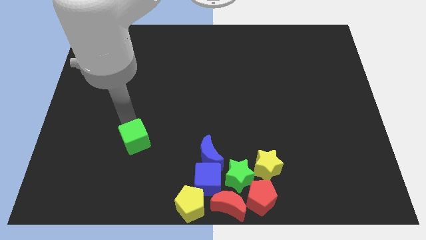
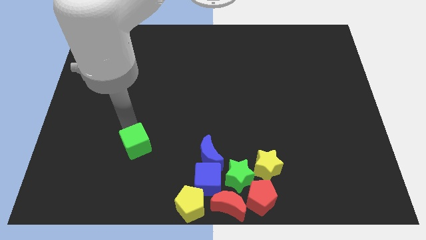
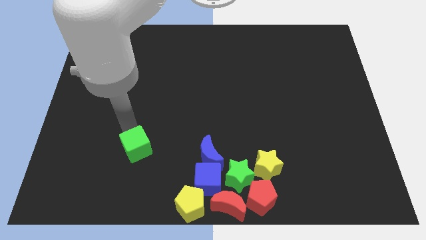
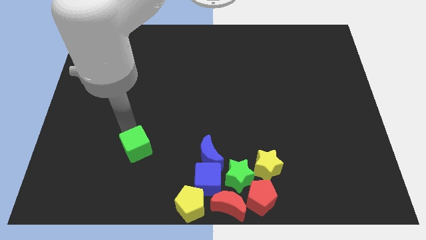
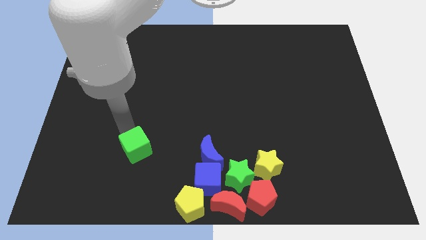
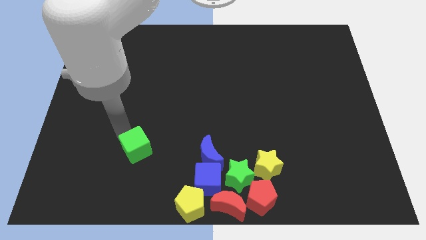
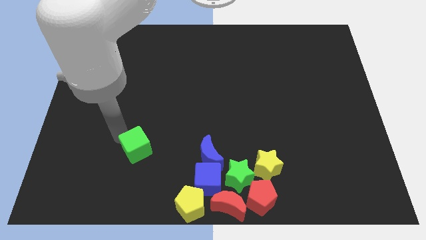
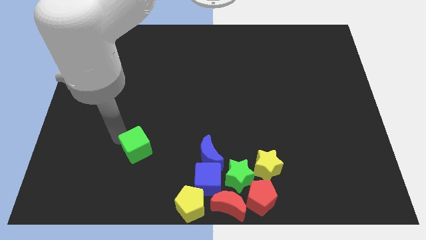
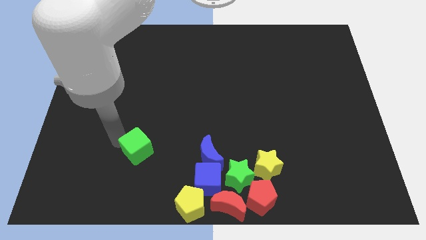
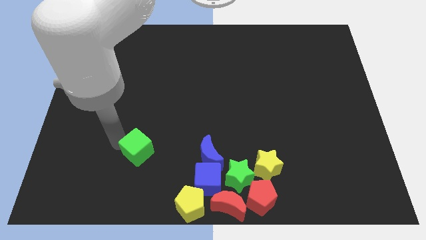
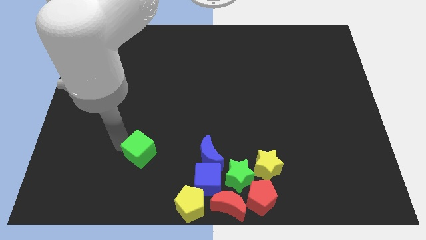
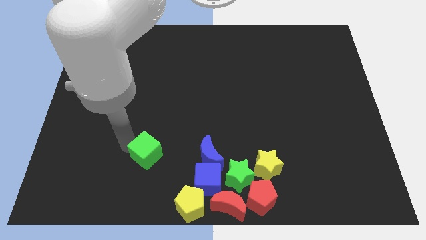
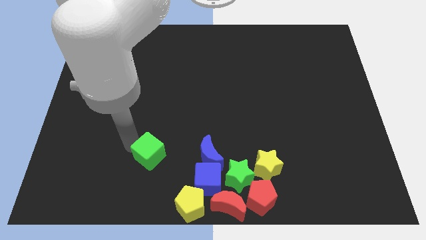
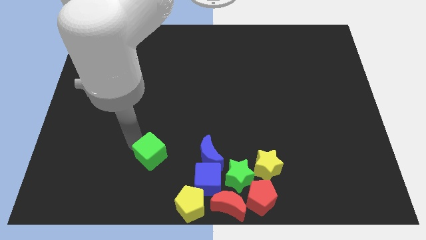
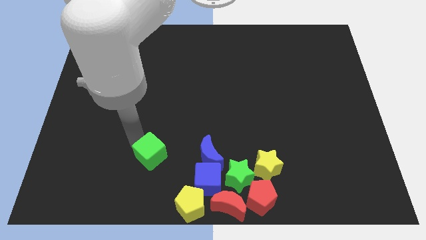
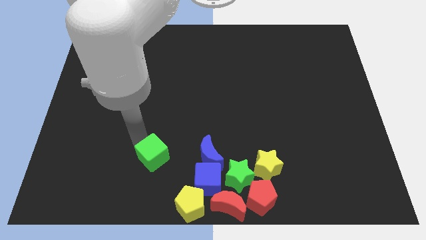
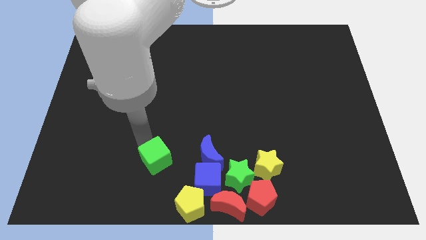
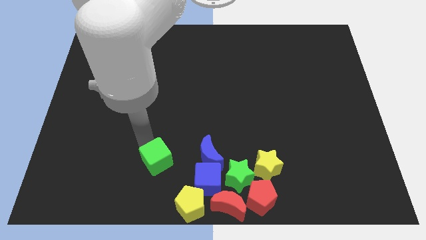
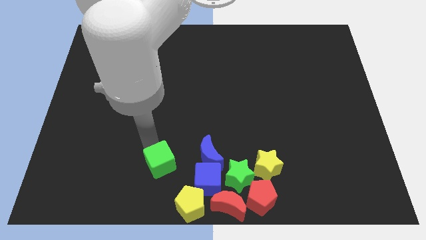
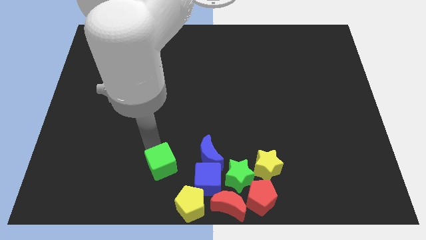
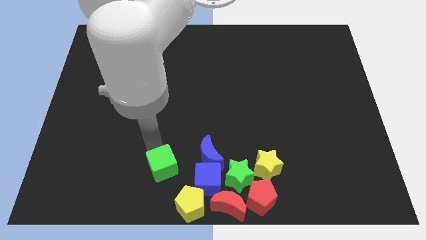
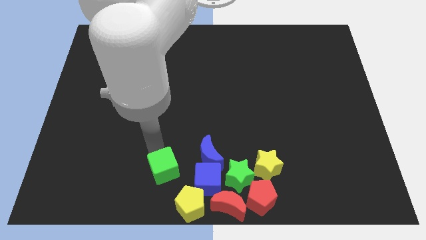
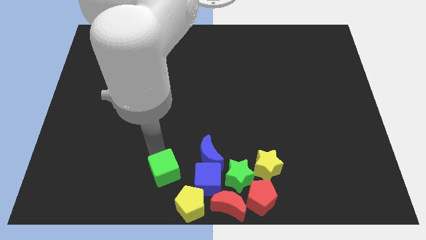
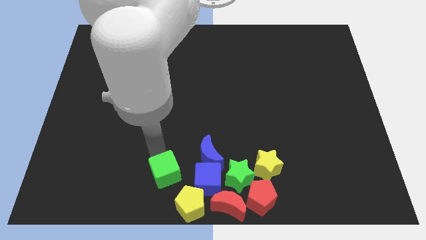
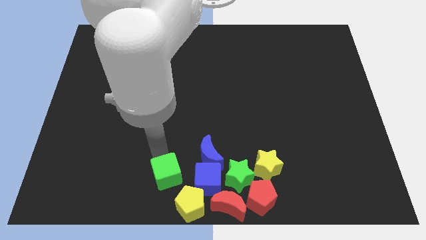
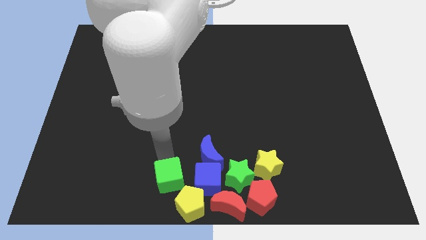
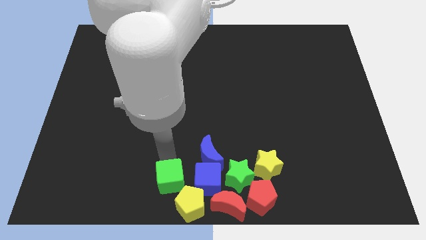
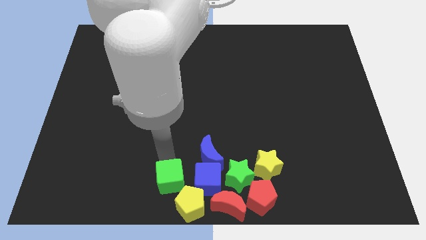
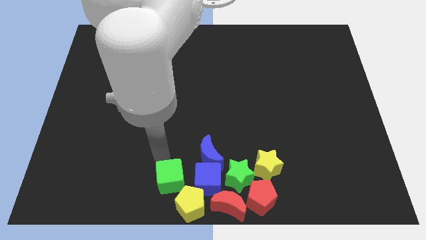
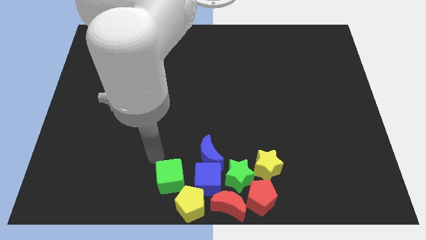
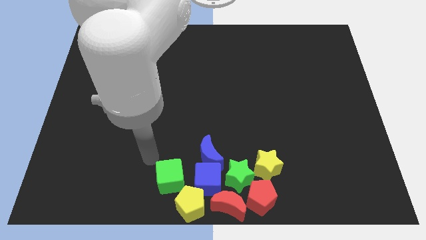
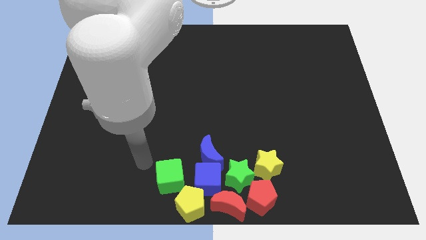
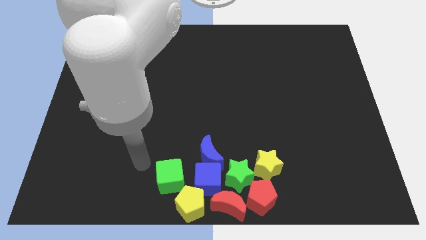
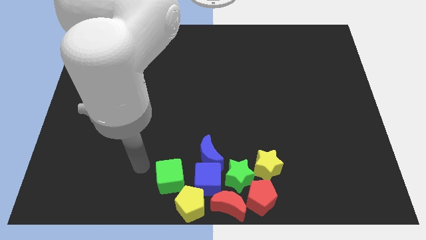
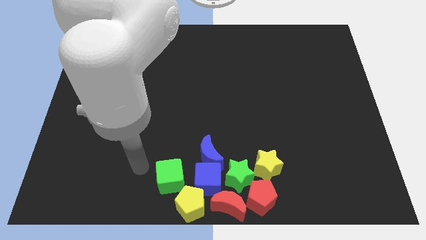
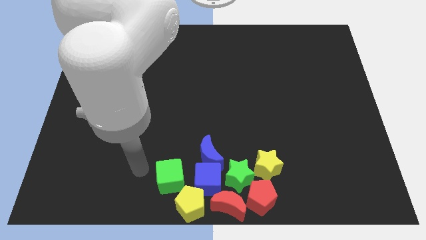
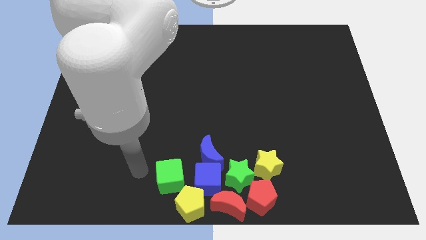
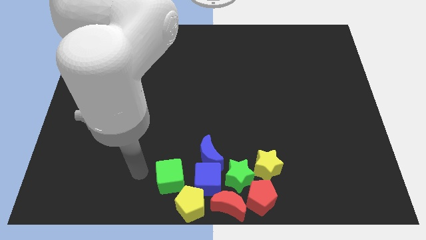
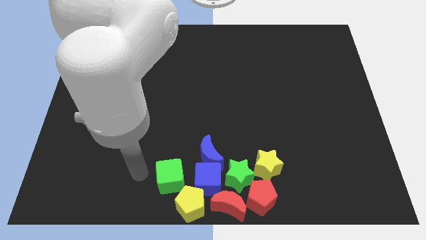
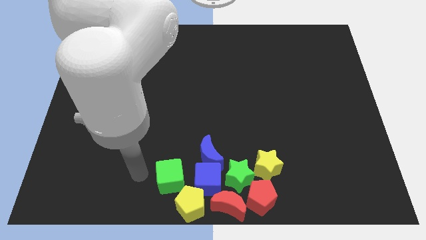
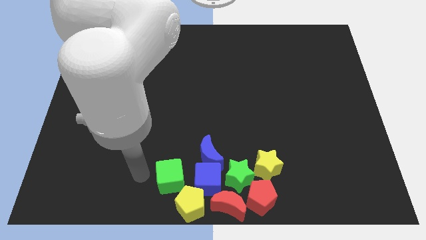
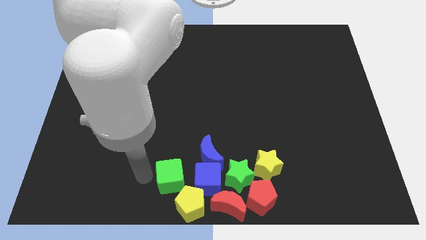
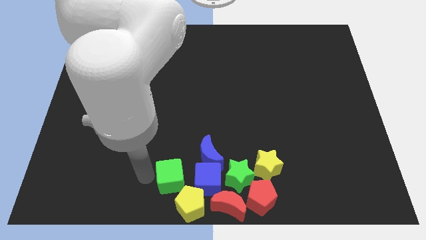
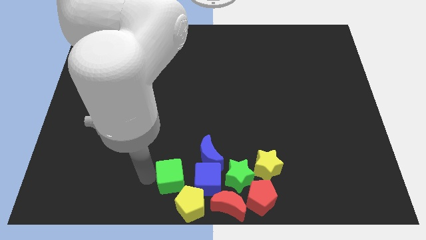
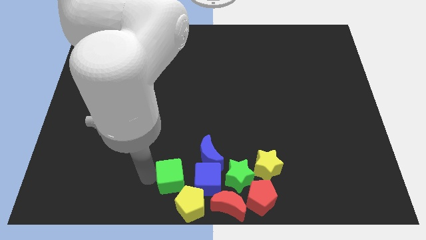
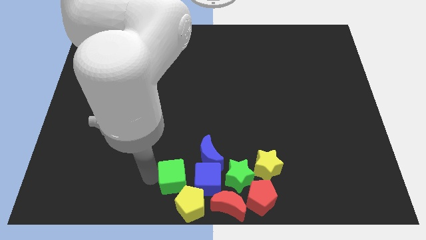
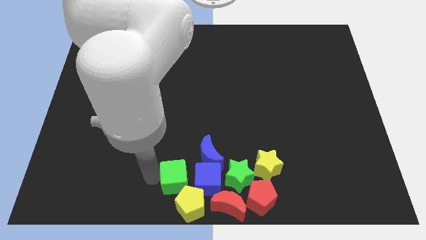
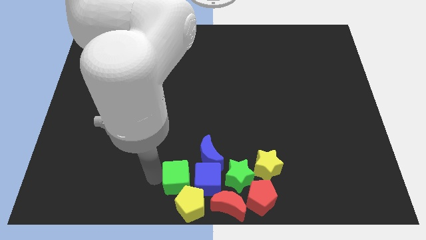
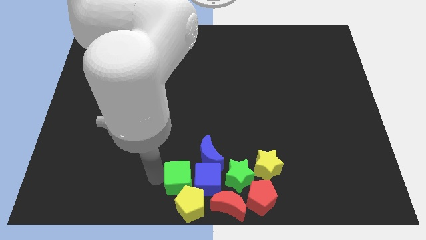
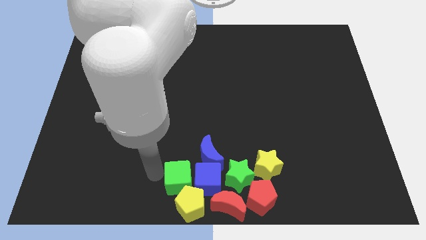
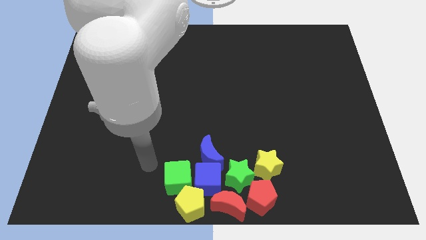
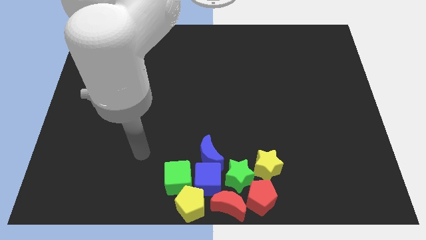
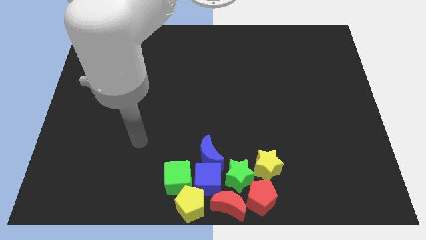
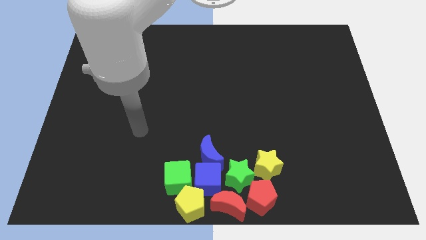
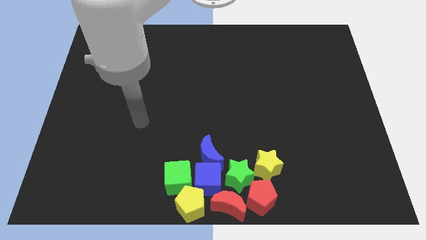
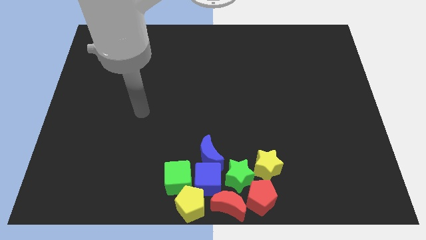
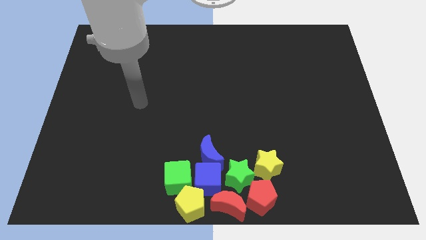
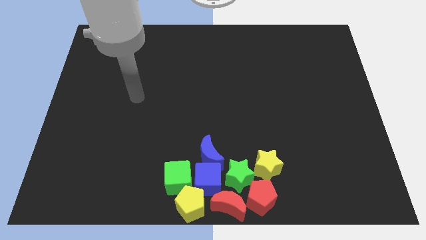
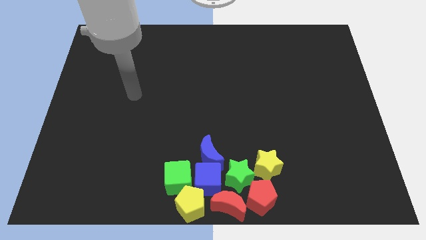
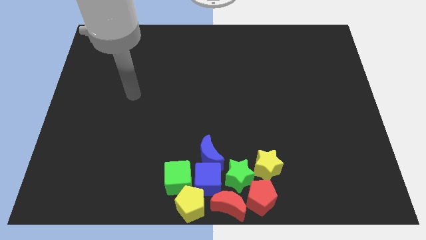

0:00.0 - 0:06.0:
move the green cube to the group of blocks

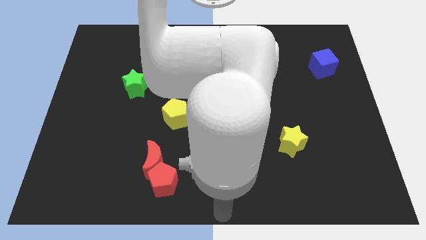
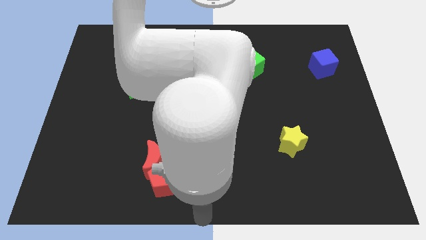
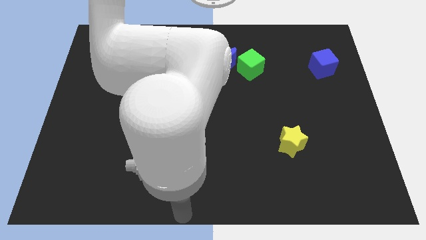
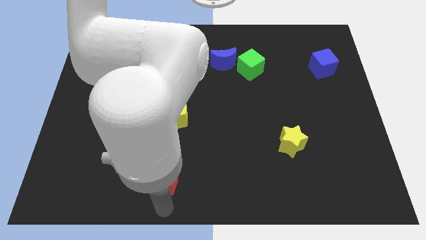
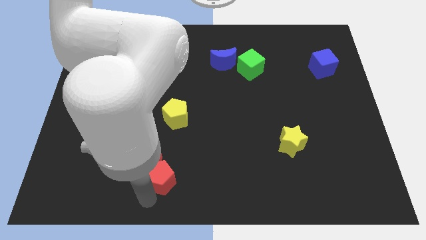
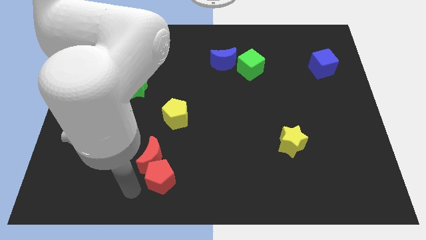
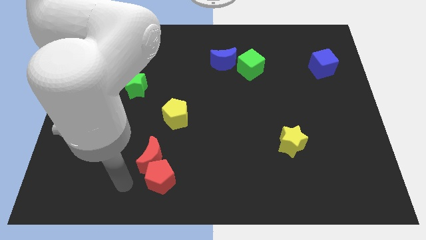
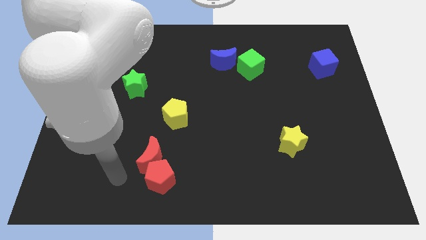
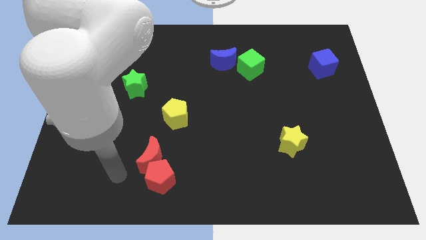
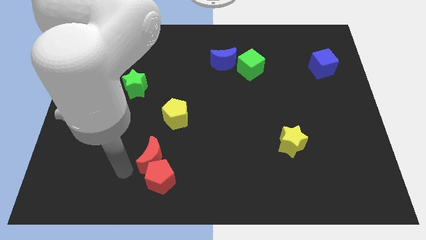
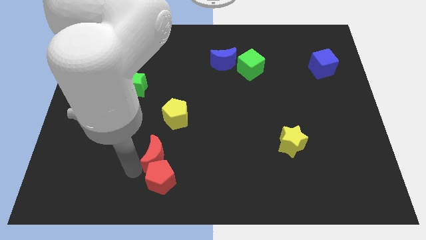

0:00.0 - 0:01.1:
move your arm to the left side of the red crescent

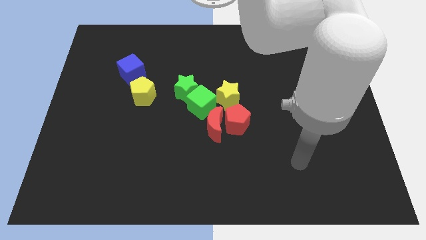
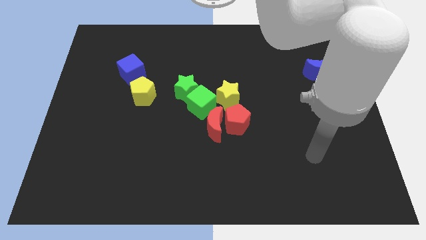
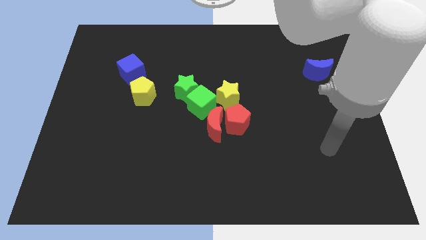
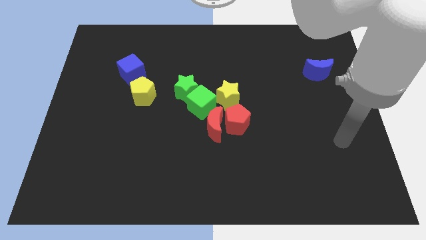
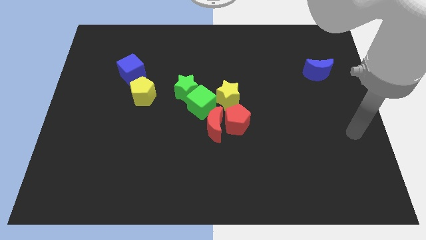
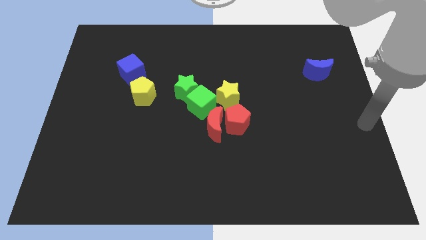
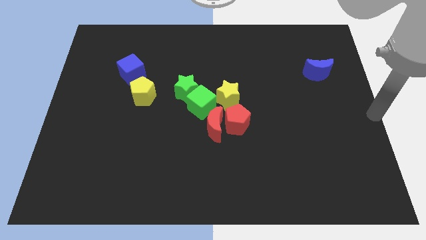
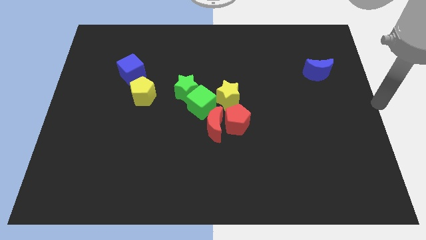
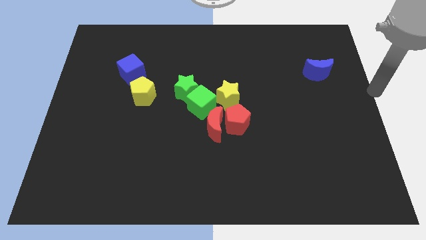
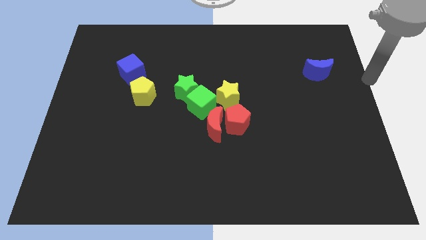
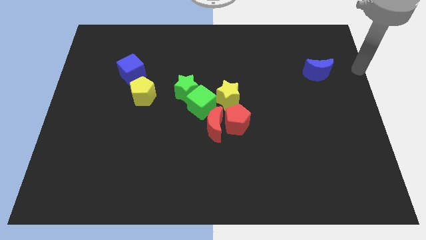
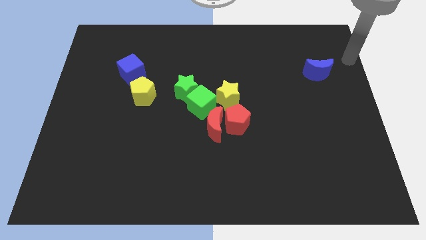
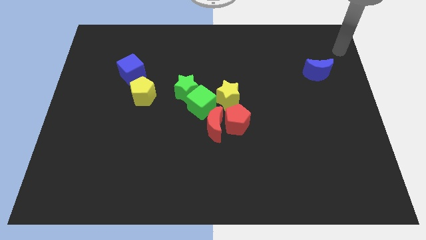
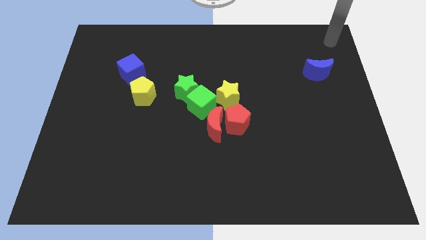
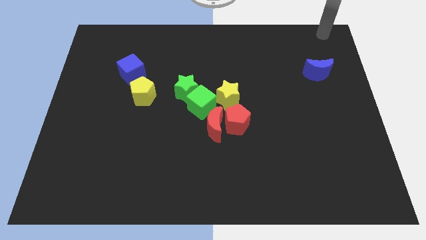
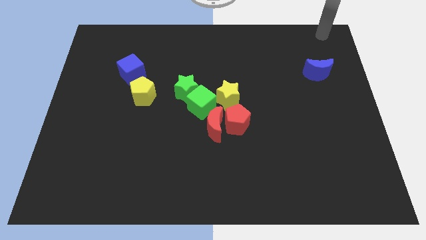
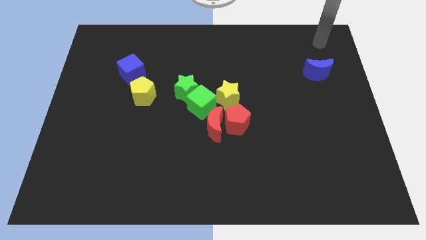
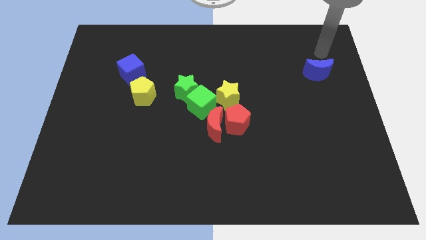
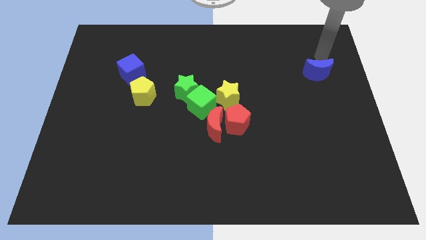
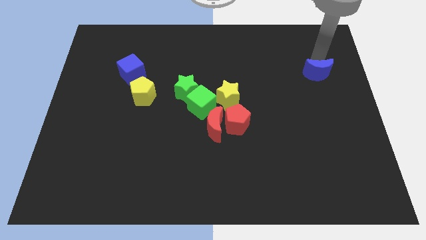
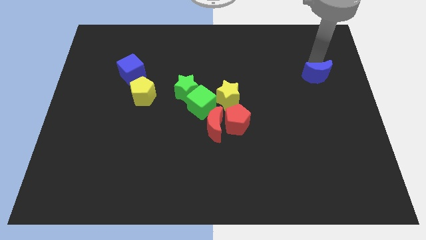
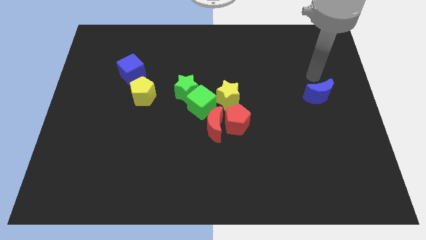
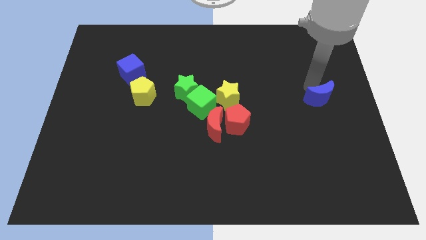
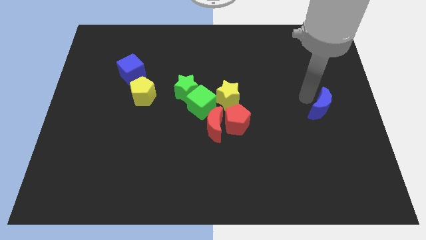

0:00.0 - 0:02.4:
push blue crescent parallel to the right of the yellow star
